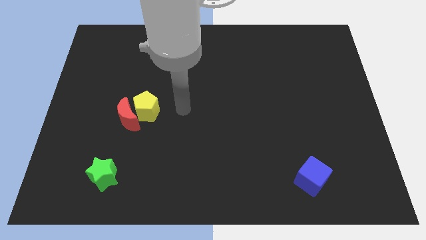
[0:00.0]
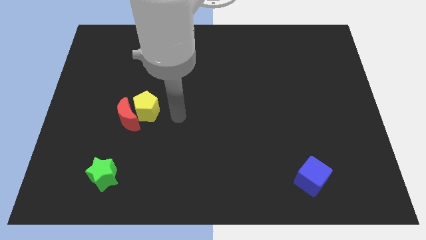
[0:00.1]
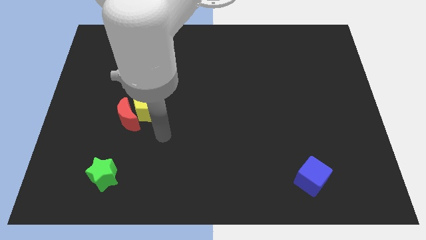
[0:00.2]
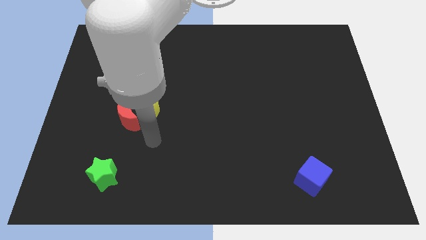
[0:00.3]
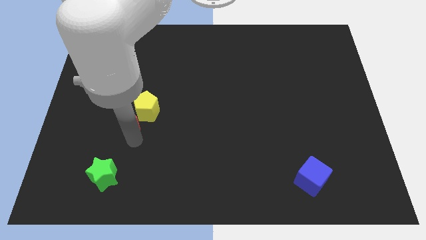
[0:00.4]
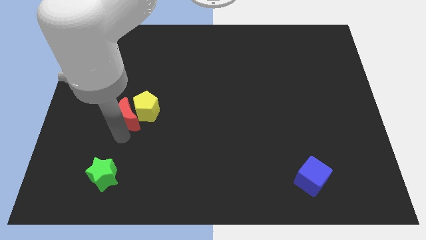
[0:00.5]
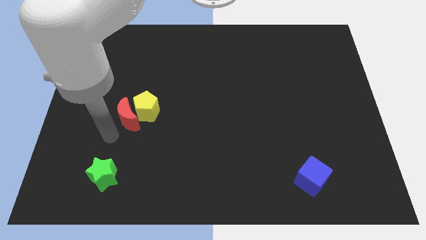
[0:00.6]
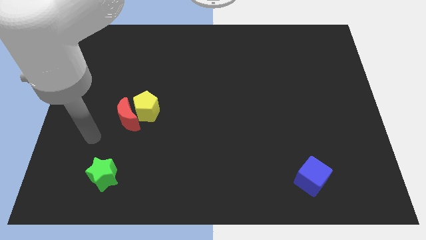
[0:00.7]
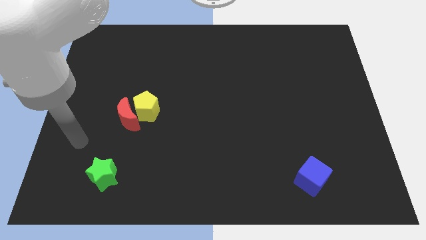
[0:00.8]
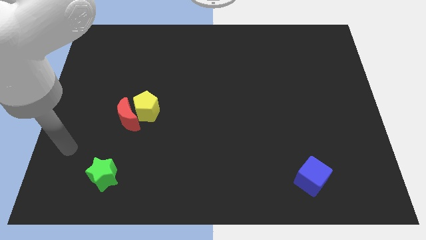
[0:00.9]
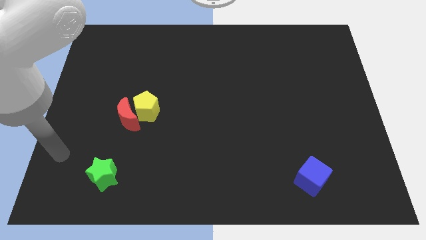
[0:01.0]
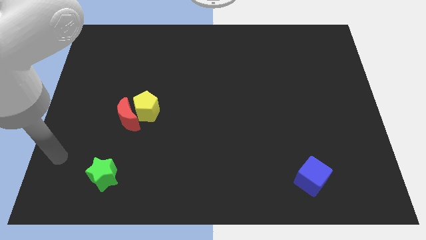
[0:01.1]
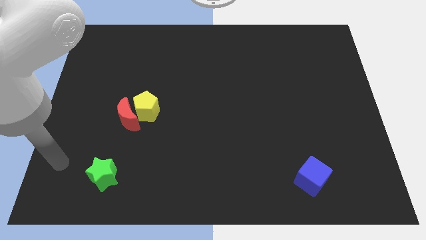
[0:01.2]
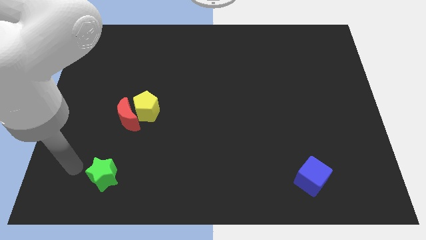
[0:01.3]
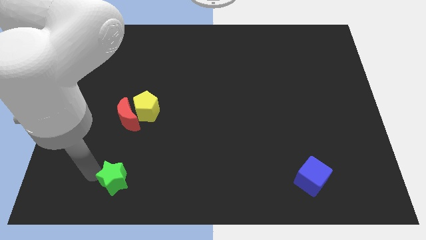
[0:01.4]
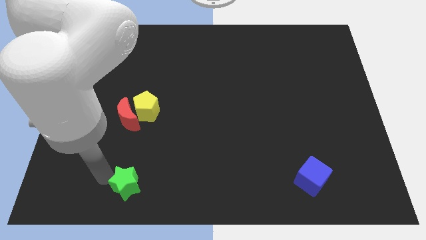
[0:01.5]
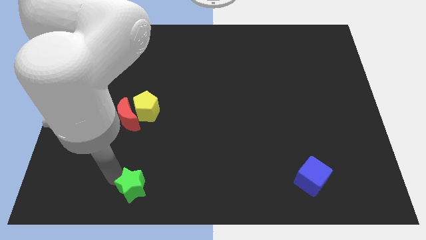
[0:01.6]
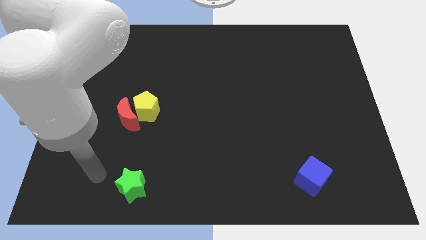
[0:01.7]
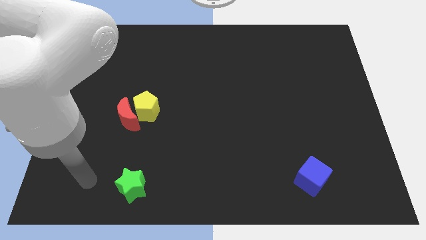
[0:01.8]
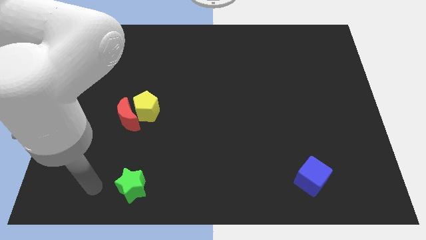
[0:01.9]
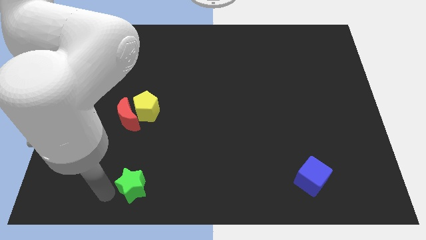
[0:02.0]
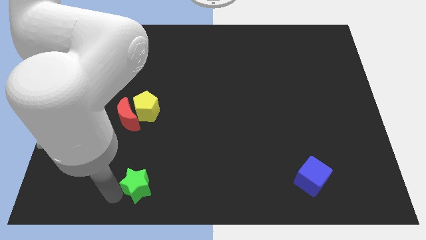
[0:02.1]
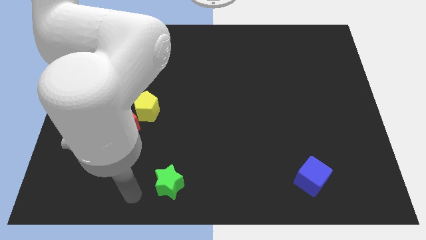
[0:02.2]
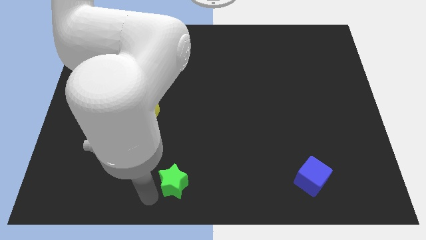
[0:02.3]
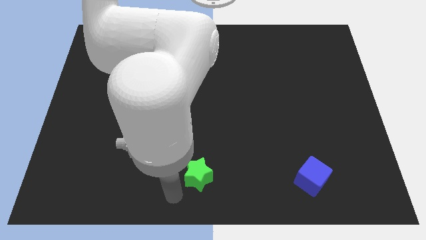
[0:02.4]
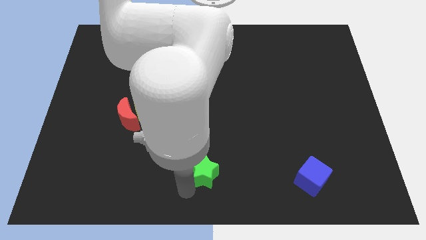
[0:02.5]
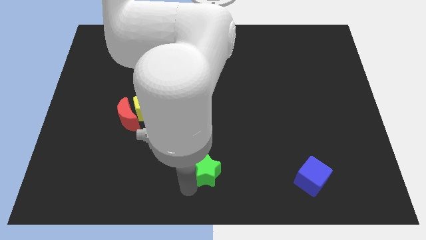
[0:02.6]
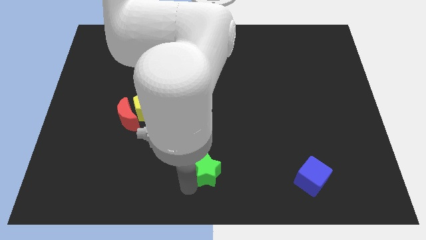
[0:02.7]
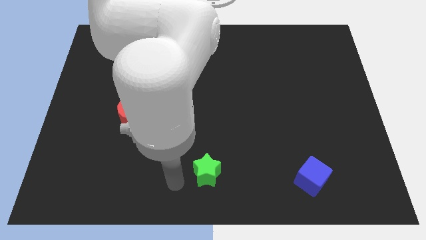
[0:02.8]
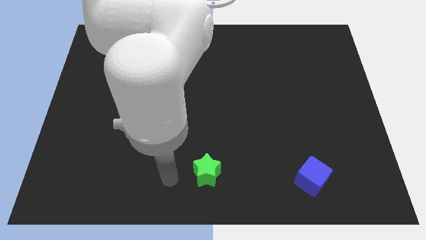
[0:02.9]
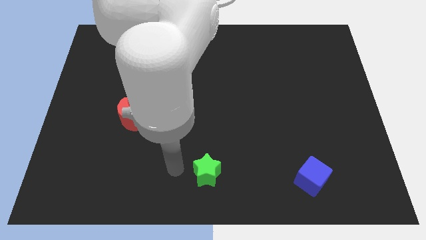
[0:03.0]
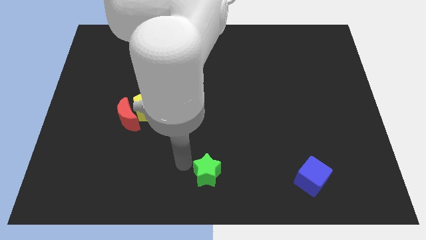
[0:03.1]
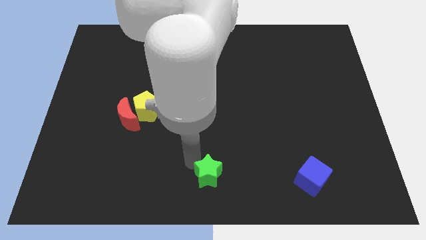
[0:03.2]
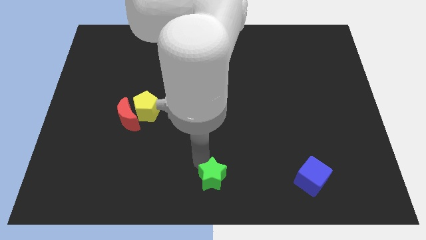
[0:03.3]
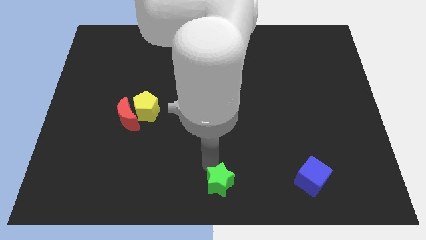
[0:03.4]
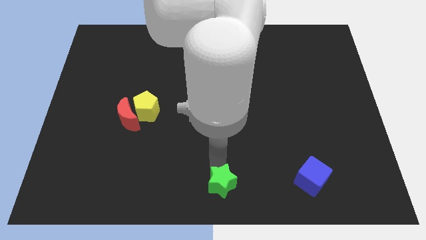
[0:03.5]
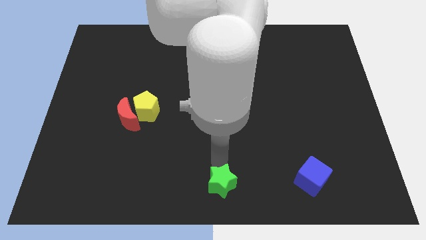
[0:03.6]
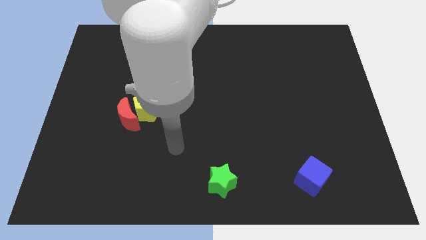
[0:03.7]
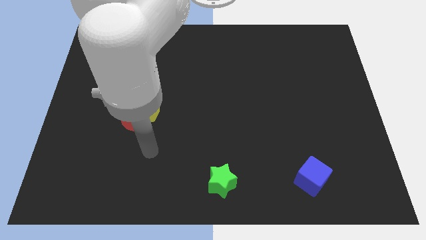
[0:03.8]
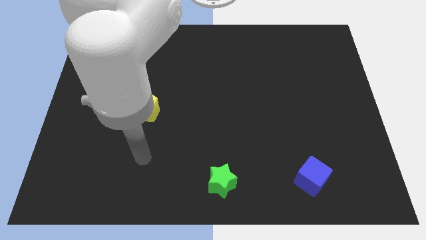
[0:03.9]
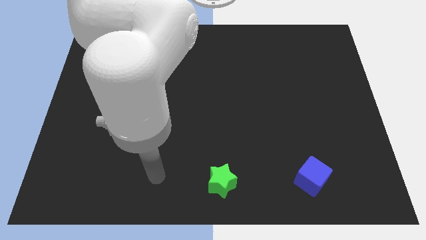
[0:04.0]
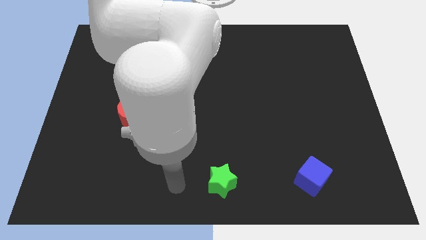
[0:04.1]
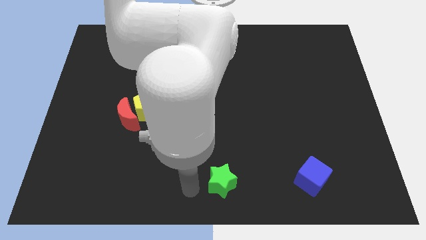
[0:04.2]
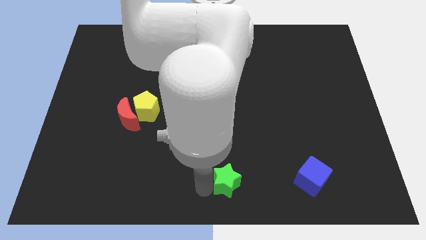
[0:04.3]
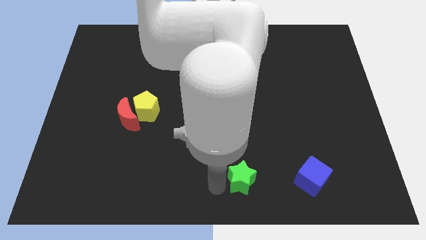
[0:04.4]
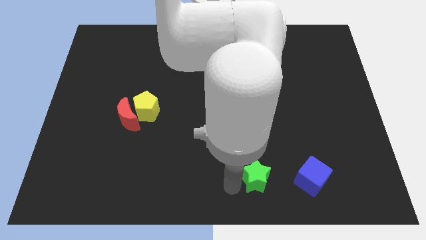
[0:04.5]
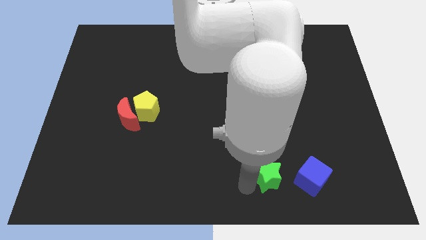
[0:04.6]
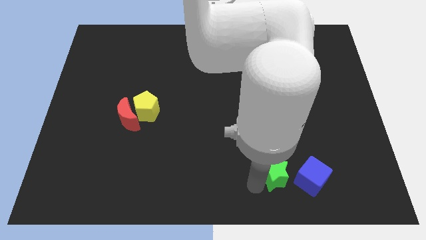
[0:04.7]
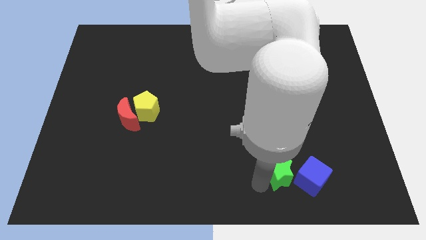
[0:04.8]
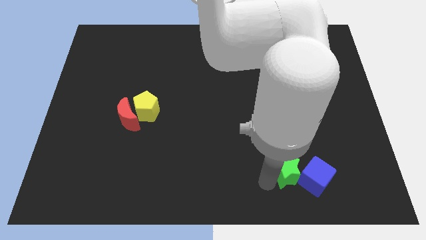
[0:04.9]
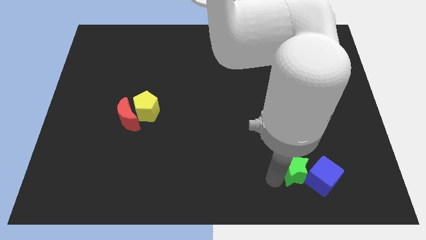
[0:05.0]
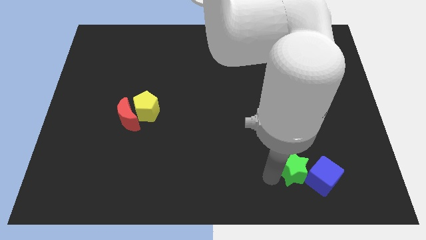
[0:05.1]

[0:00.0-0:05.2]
push the star towards the blue cube

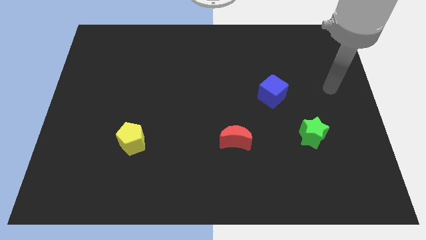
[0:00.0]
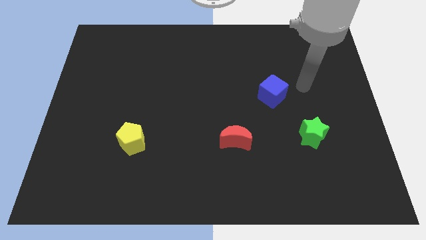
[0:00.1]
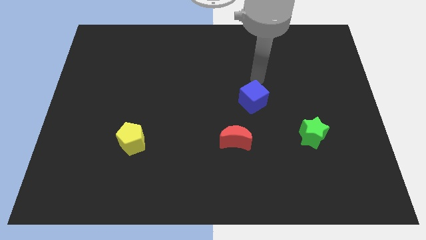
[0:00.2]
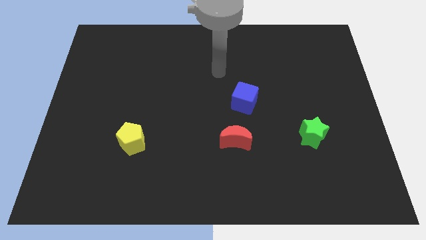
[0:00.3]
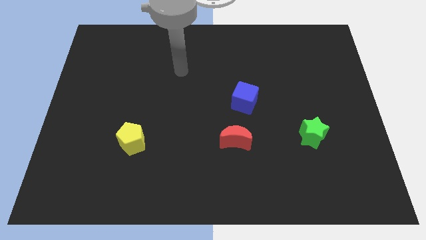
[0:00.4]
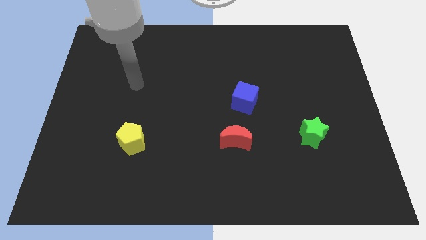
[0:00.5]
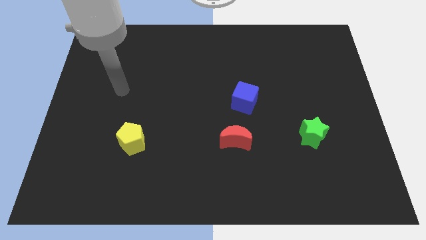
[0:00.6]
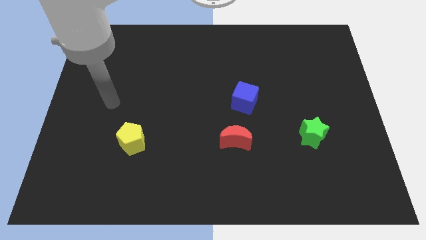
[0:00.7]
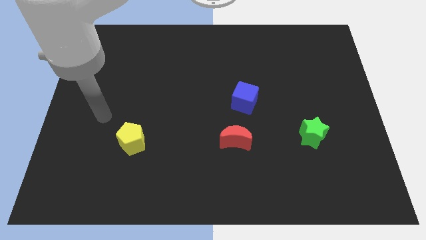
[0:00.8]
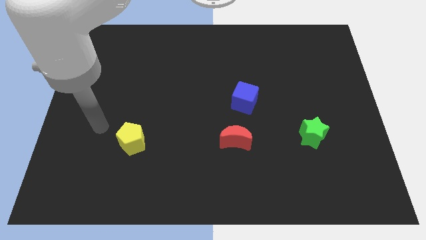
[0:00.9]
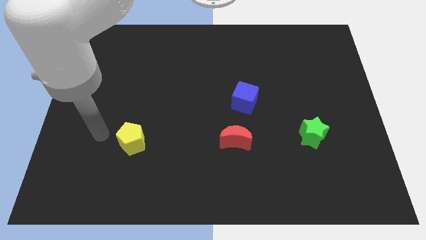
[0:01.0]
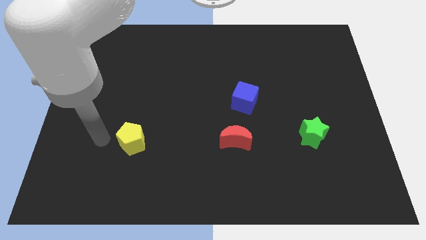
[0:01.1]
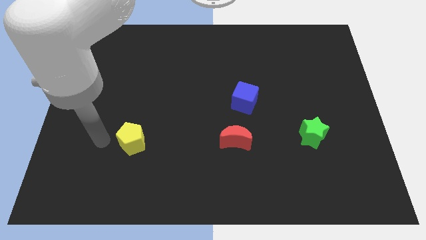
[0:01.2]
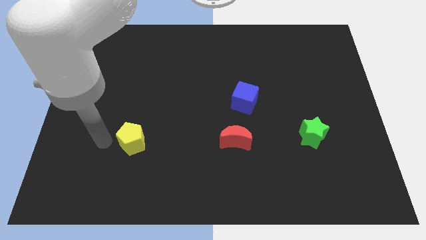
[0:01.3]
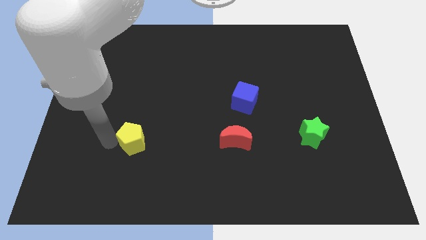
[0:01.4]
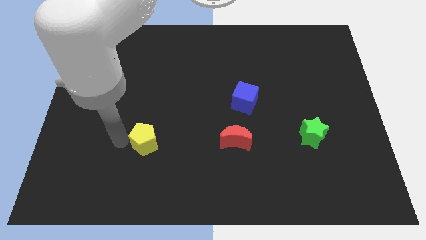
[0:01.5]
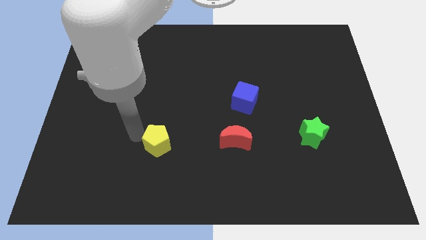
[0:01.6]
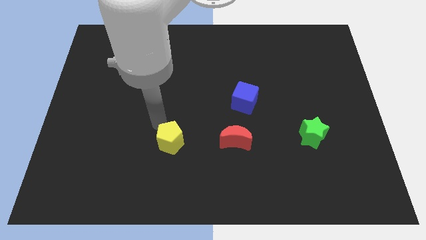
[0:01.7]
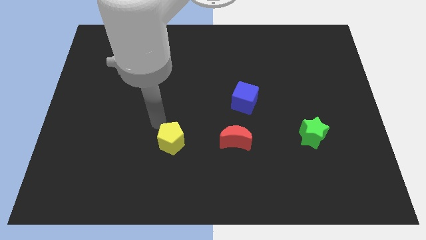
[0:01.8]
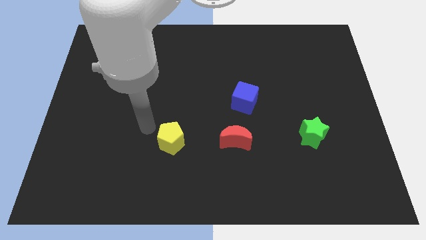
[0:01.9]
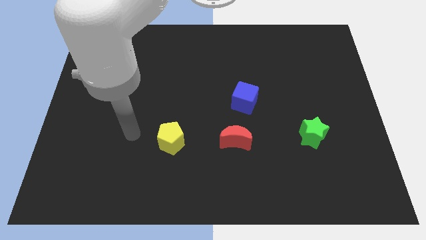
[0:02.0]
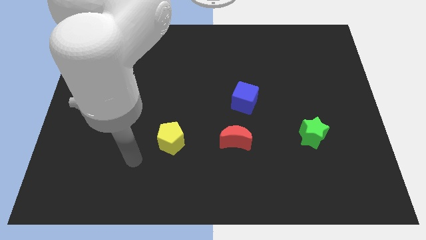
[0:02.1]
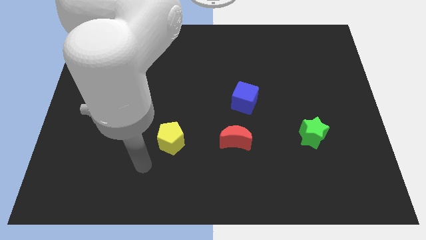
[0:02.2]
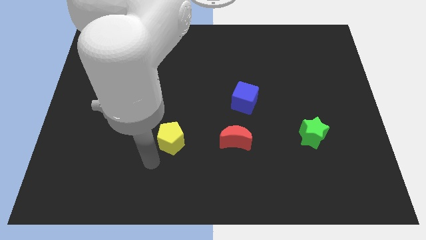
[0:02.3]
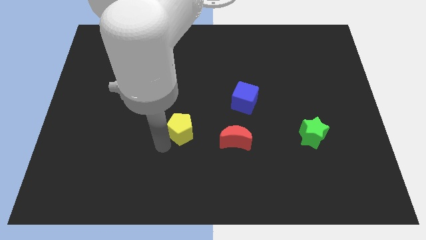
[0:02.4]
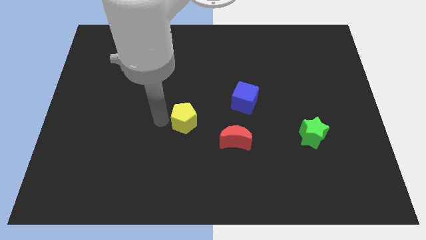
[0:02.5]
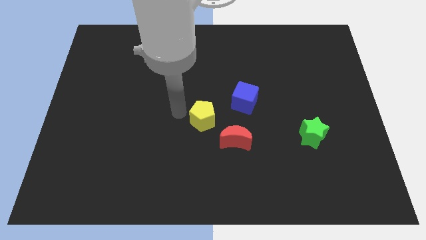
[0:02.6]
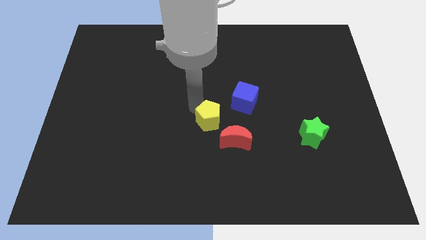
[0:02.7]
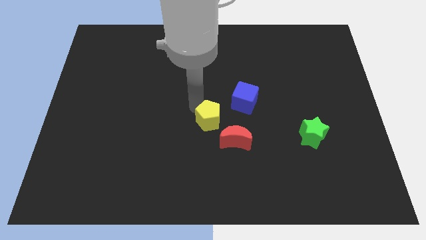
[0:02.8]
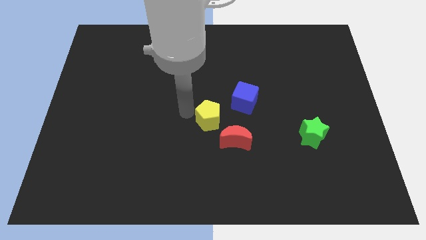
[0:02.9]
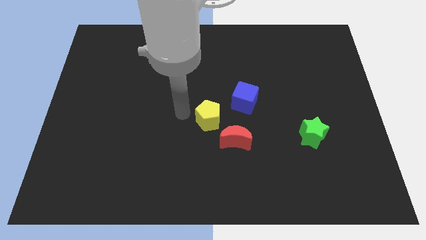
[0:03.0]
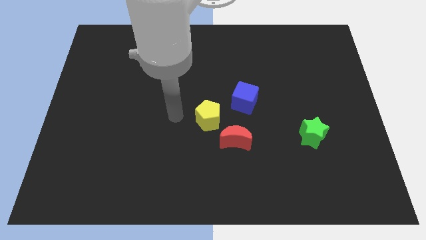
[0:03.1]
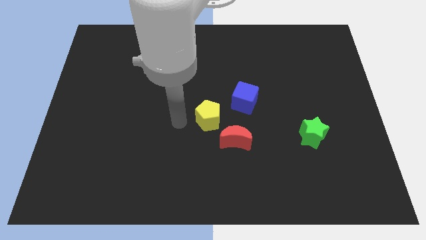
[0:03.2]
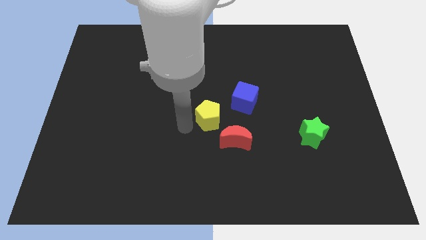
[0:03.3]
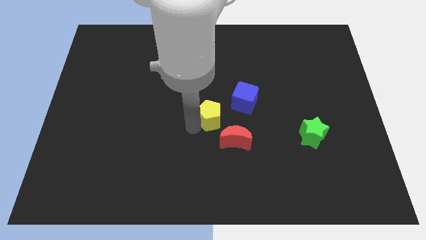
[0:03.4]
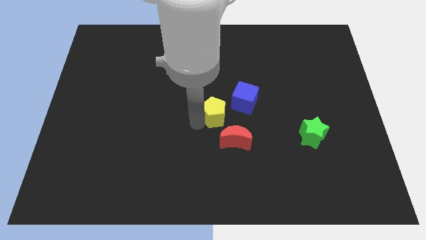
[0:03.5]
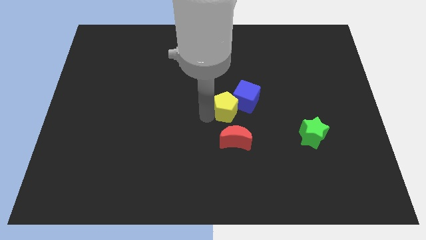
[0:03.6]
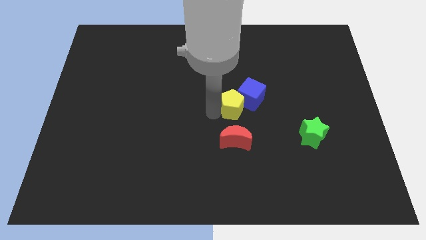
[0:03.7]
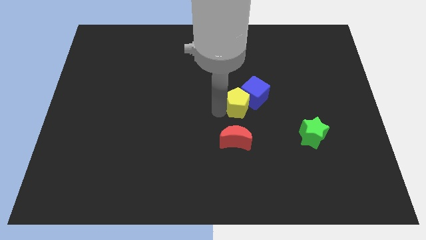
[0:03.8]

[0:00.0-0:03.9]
move the yellow pentagon close to the cube
